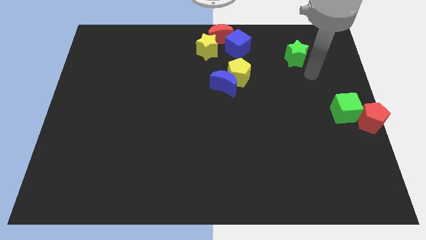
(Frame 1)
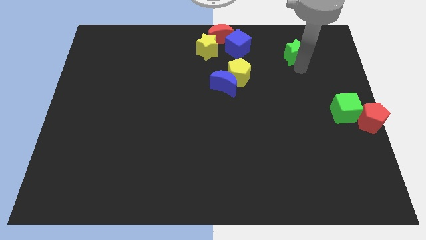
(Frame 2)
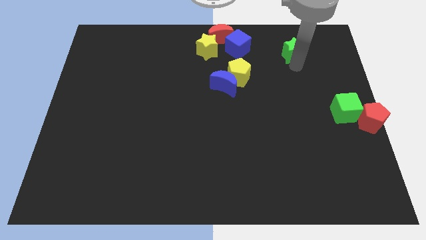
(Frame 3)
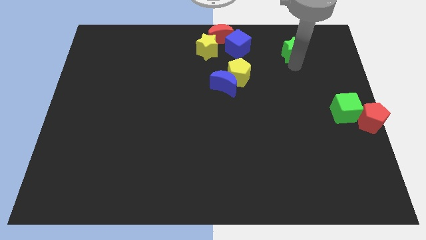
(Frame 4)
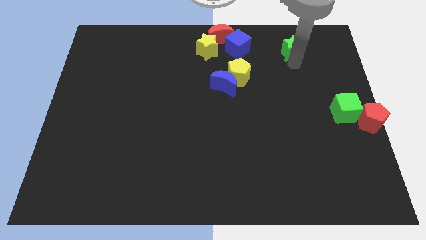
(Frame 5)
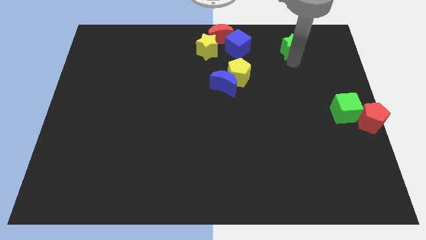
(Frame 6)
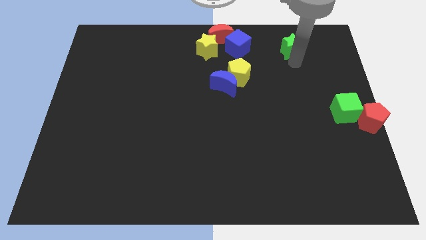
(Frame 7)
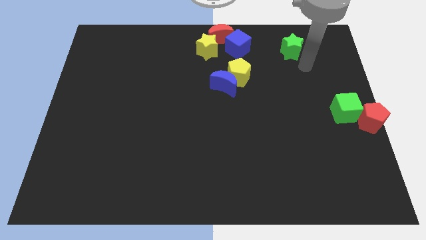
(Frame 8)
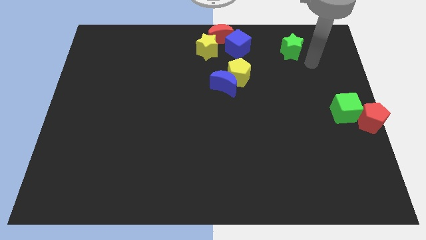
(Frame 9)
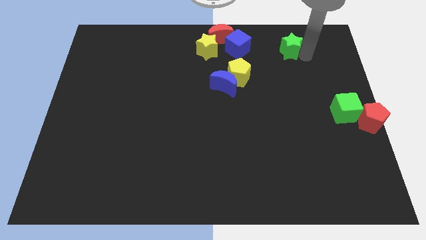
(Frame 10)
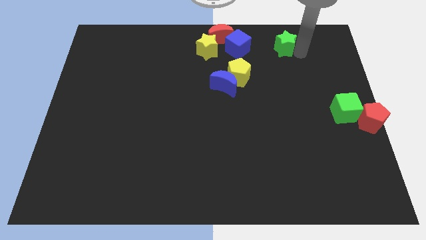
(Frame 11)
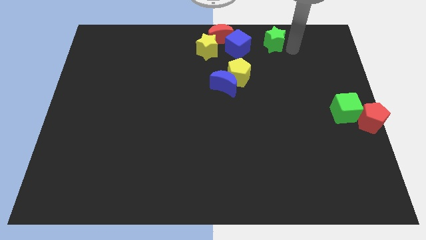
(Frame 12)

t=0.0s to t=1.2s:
place the green star right to the blue cube to form a horizontal line

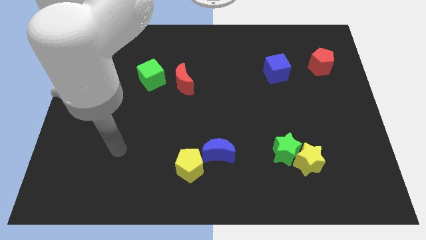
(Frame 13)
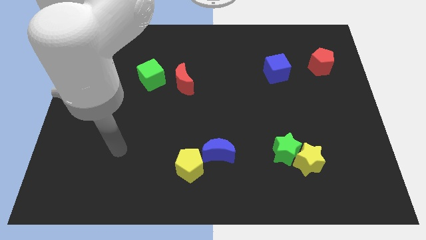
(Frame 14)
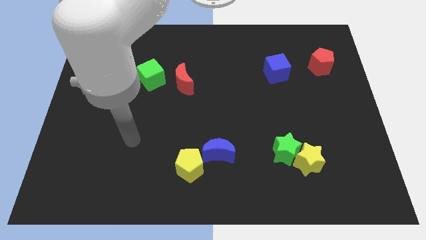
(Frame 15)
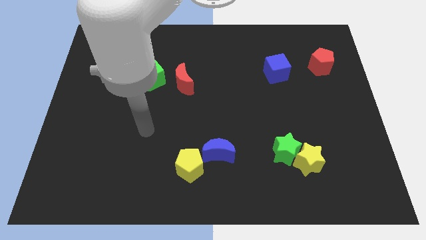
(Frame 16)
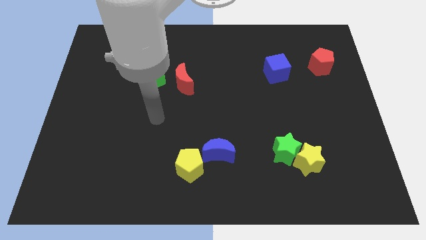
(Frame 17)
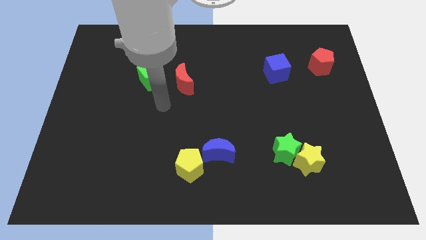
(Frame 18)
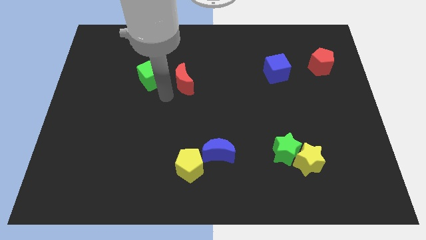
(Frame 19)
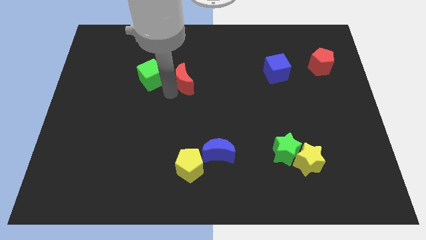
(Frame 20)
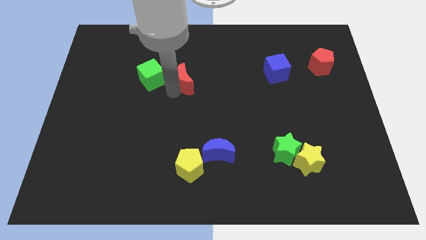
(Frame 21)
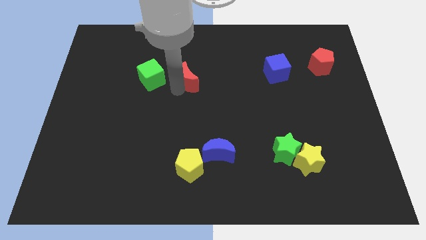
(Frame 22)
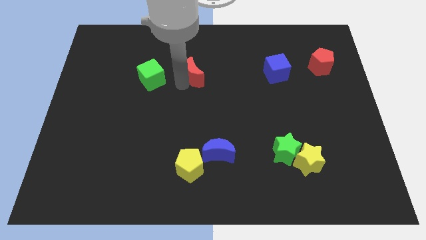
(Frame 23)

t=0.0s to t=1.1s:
push the red crescent slightly to the top

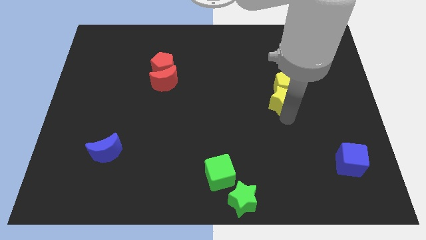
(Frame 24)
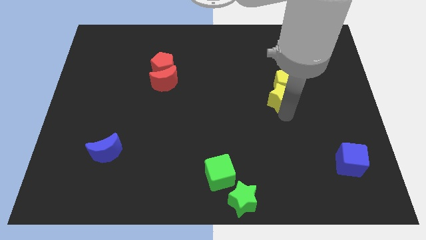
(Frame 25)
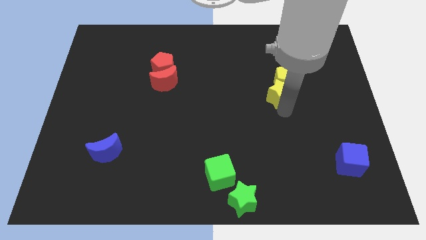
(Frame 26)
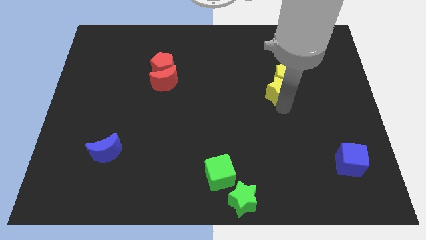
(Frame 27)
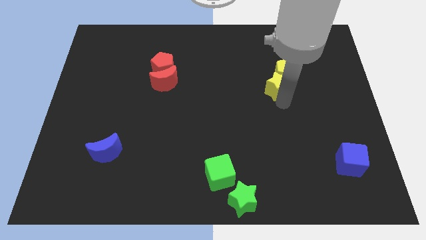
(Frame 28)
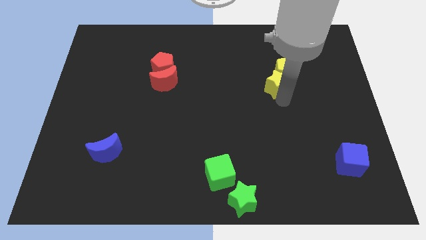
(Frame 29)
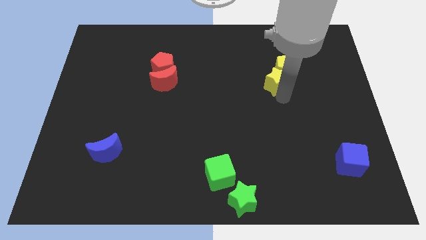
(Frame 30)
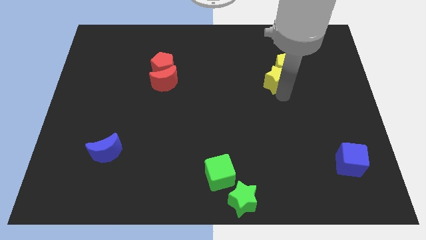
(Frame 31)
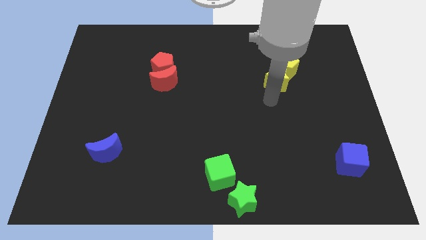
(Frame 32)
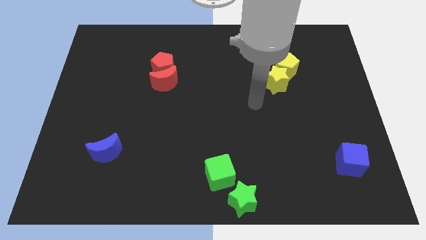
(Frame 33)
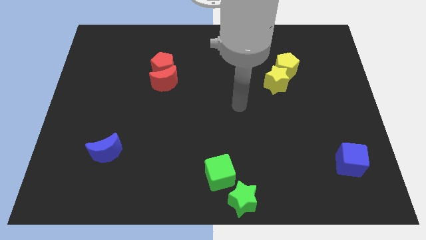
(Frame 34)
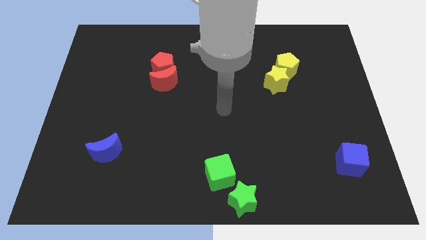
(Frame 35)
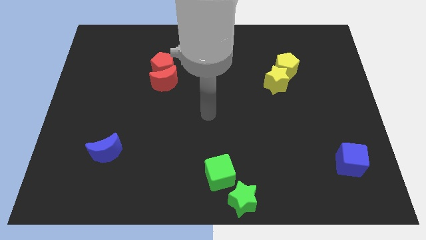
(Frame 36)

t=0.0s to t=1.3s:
push the yellow star into the yellow pentagon

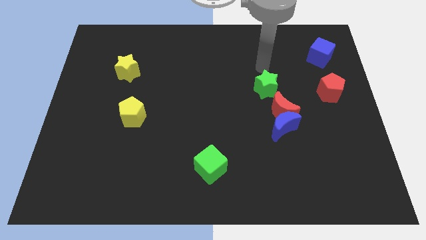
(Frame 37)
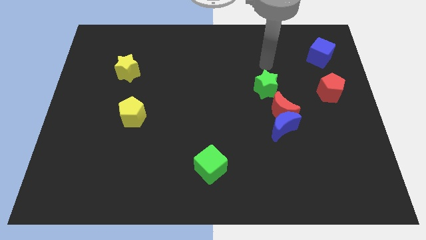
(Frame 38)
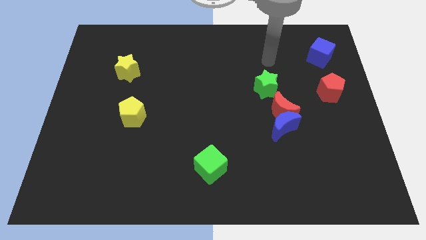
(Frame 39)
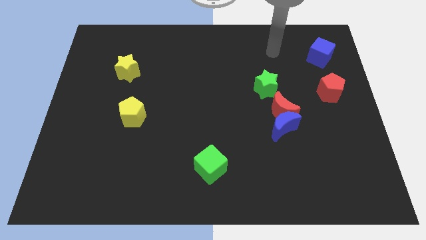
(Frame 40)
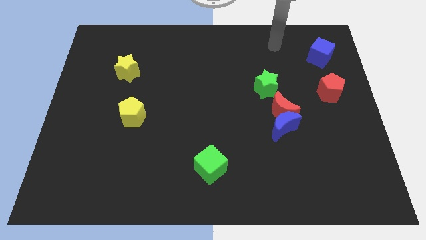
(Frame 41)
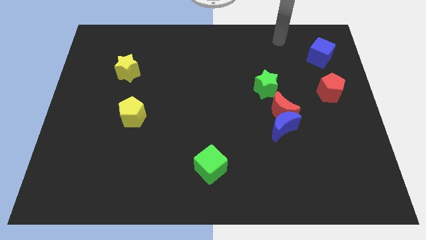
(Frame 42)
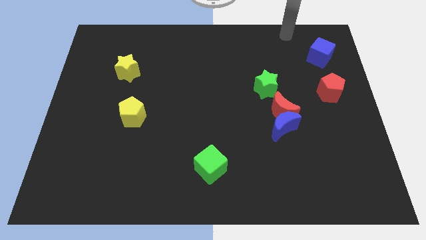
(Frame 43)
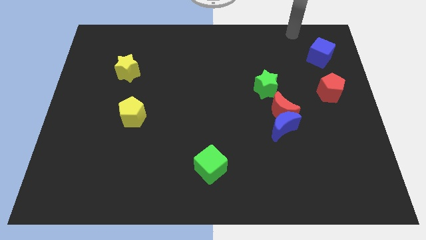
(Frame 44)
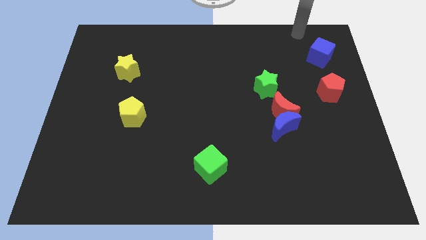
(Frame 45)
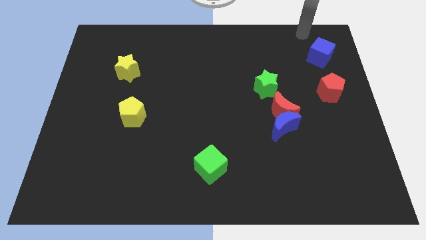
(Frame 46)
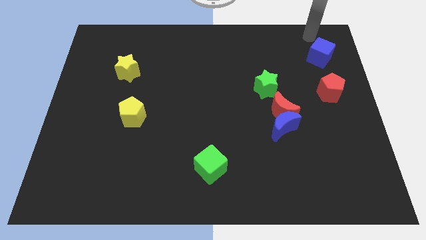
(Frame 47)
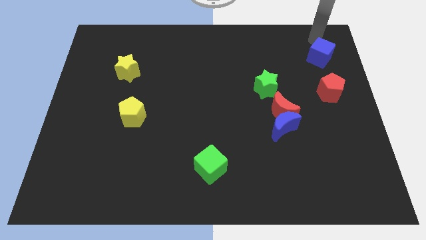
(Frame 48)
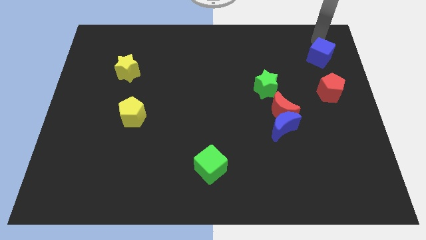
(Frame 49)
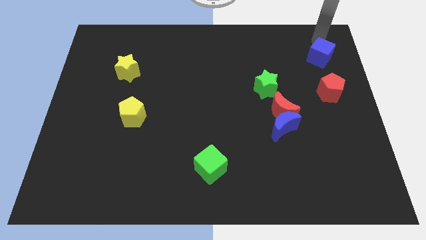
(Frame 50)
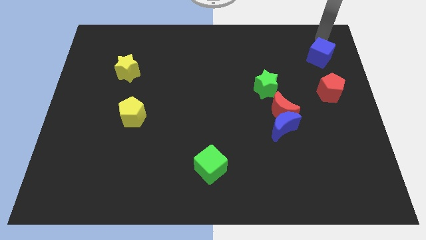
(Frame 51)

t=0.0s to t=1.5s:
point your arm at the top side of the blue cube

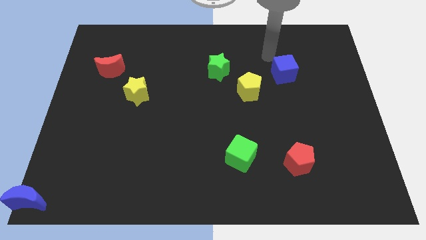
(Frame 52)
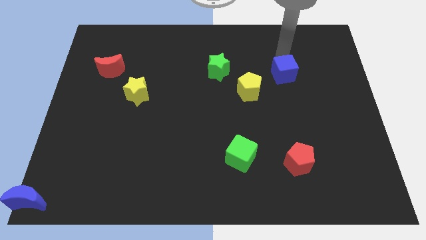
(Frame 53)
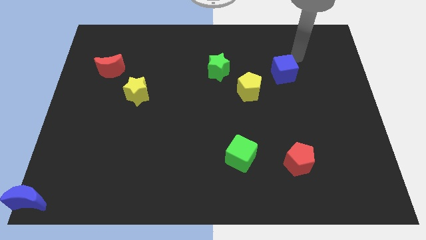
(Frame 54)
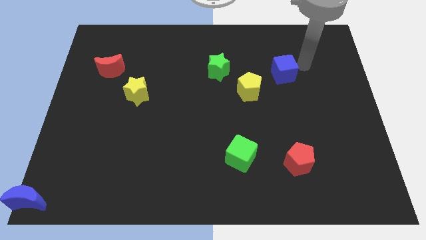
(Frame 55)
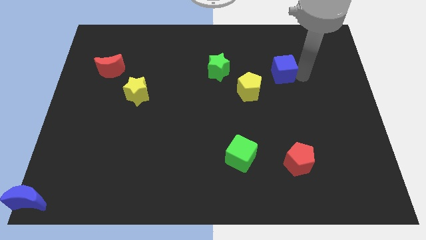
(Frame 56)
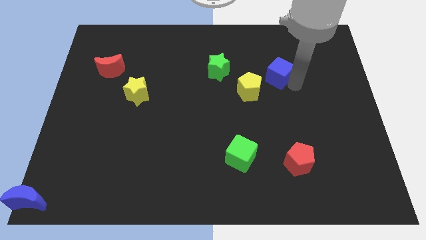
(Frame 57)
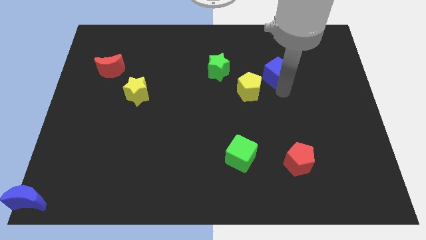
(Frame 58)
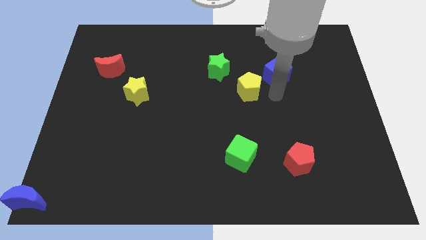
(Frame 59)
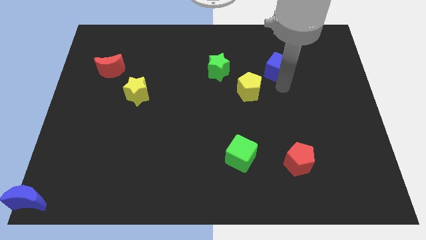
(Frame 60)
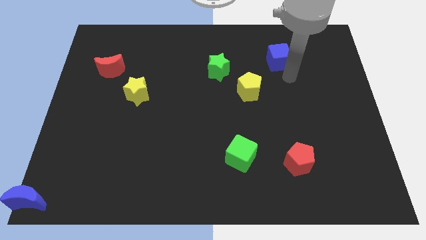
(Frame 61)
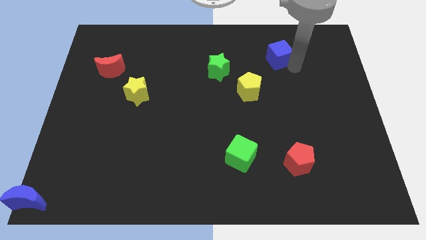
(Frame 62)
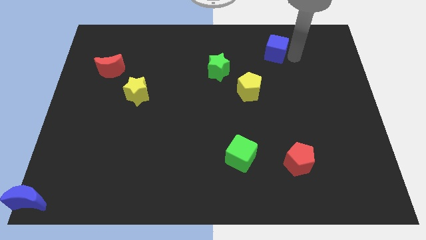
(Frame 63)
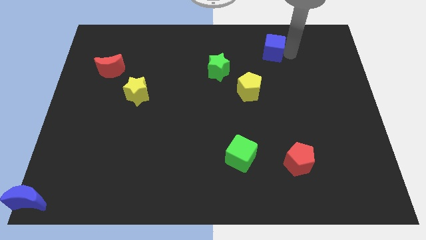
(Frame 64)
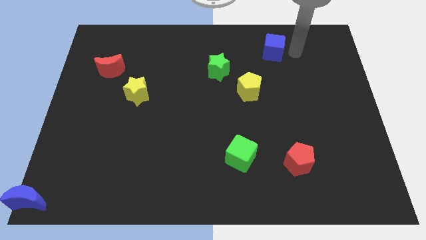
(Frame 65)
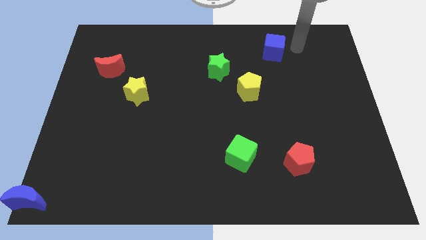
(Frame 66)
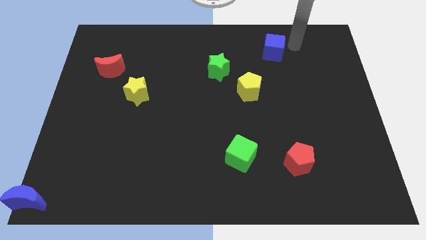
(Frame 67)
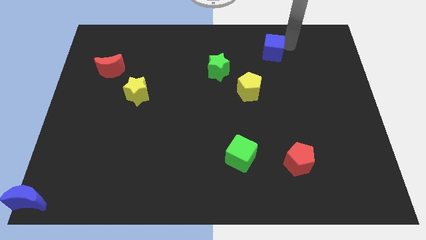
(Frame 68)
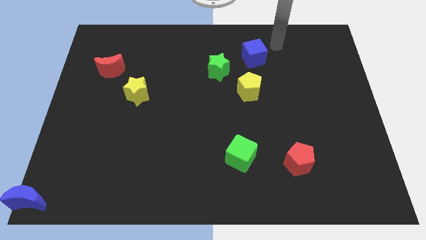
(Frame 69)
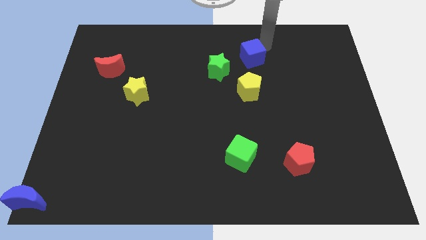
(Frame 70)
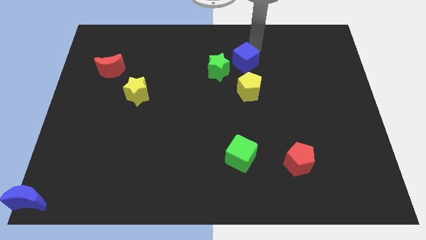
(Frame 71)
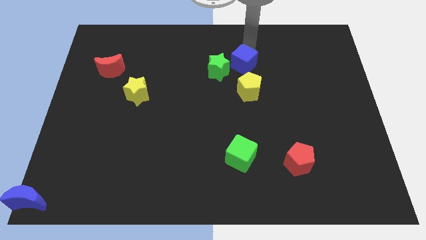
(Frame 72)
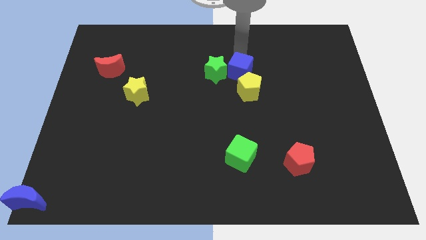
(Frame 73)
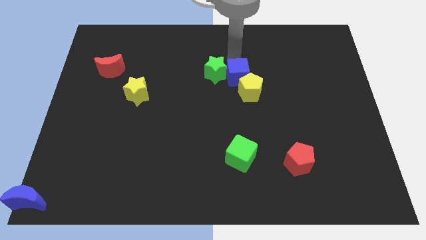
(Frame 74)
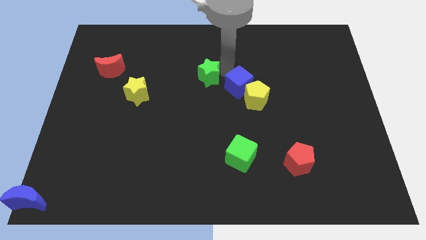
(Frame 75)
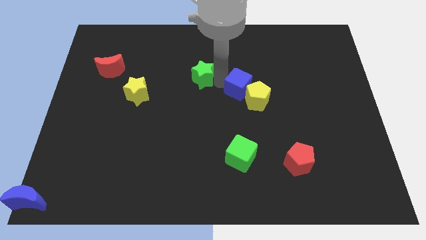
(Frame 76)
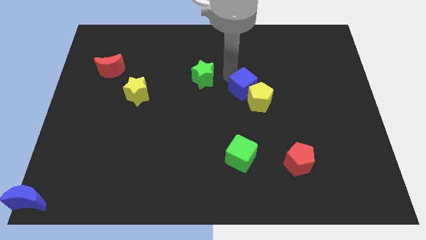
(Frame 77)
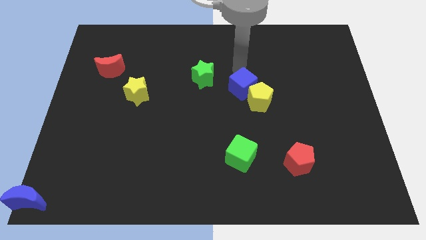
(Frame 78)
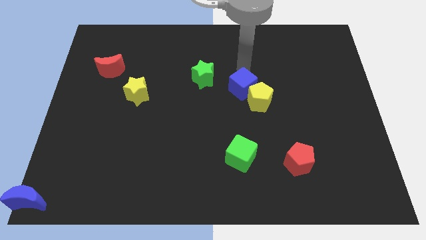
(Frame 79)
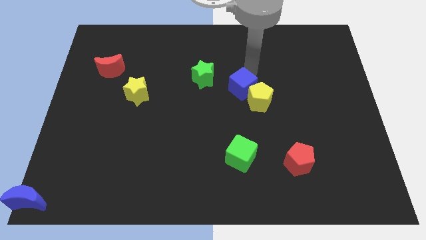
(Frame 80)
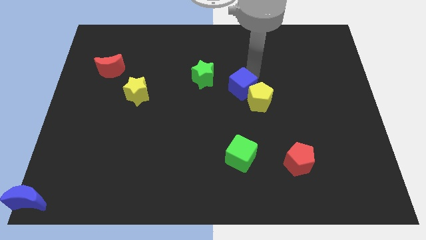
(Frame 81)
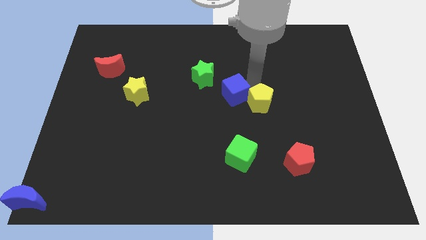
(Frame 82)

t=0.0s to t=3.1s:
move the blue cube in between the yellow pentagon and green star

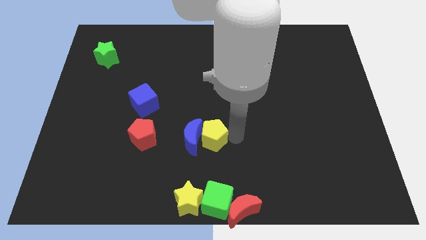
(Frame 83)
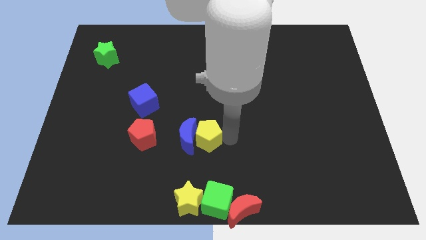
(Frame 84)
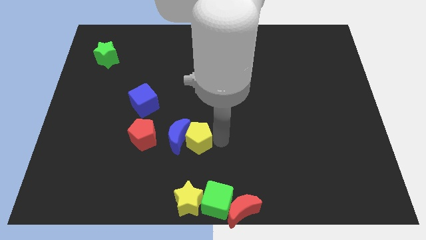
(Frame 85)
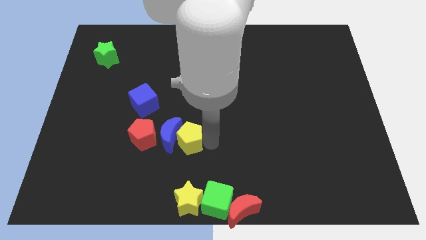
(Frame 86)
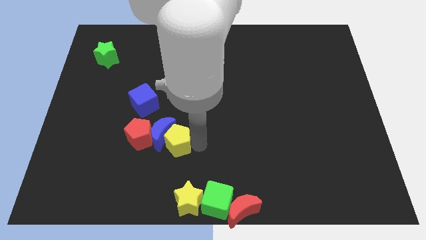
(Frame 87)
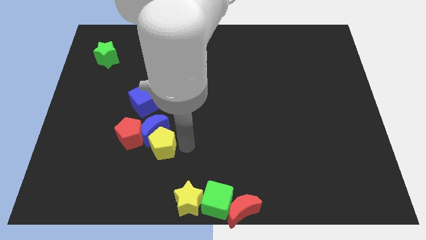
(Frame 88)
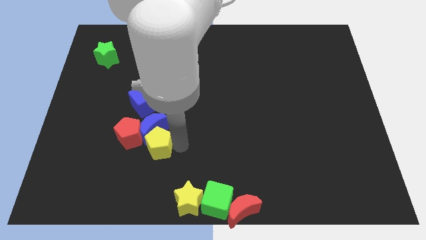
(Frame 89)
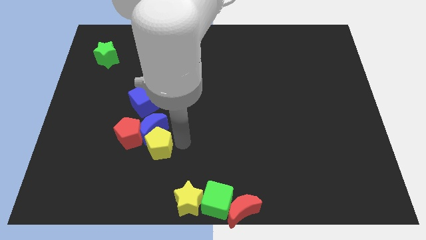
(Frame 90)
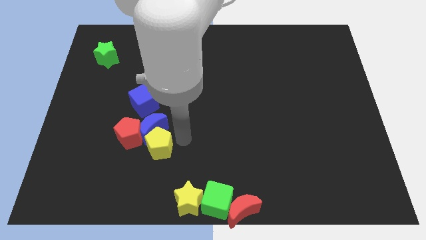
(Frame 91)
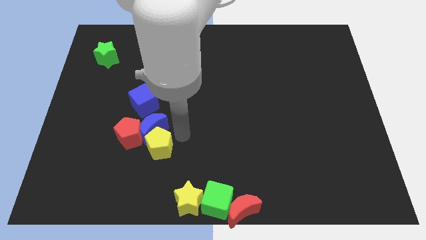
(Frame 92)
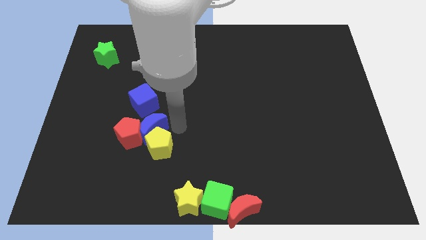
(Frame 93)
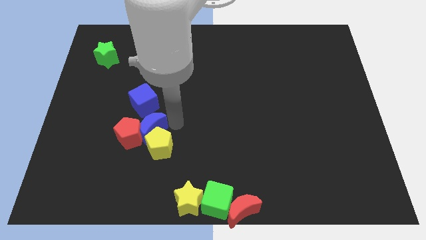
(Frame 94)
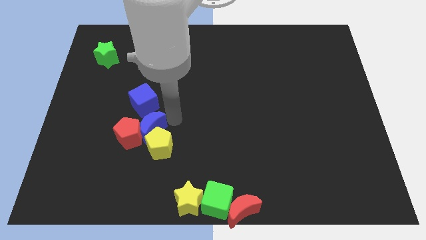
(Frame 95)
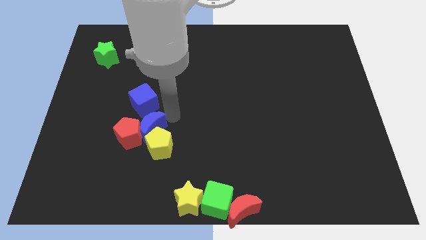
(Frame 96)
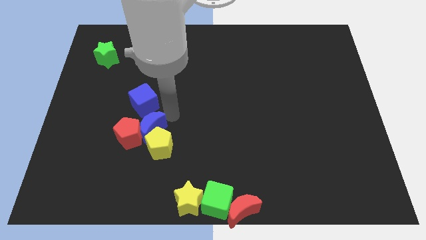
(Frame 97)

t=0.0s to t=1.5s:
move the blue moon and yellow pentagon close to the red pentagon
